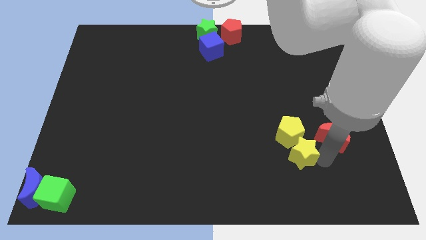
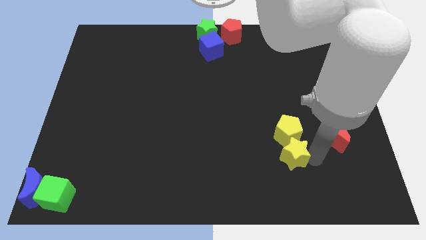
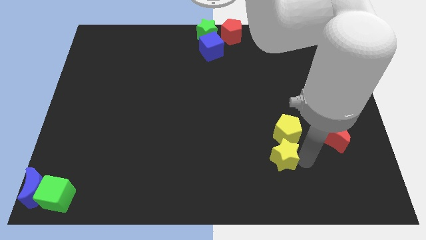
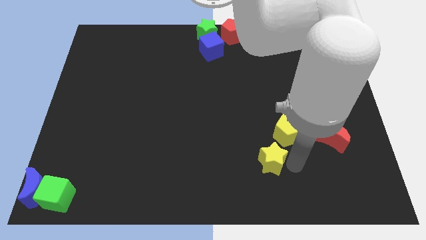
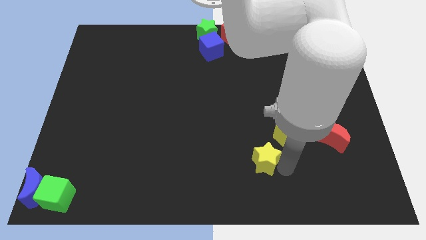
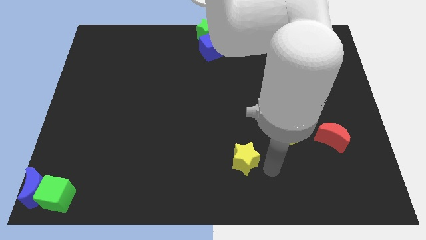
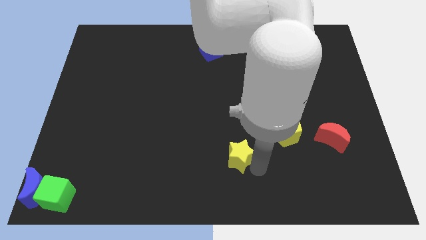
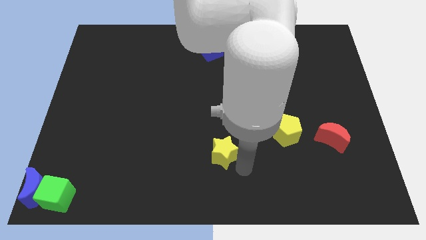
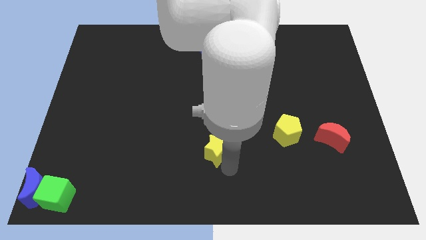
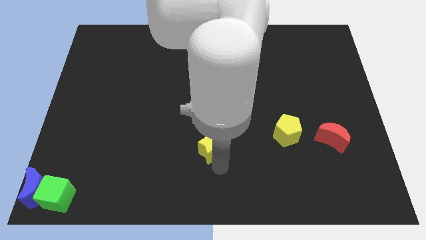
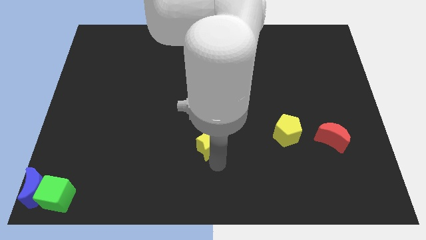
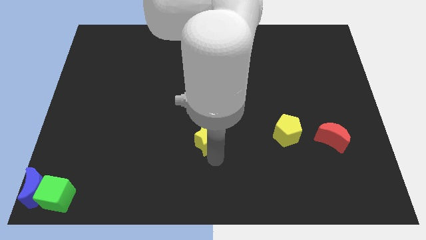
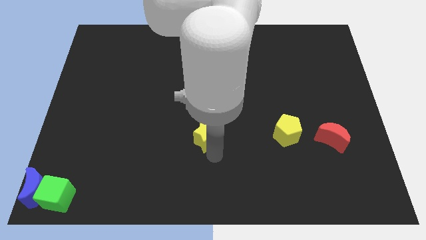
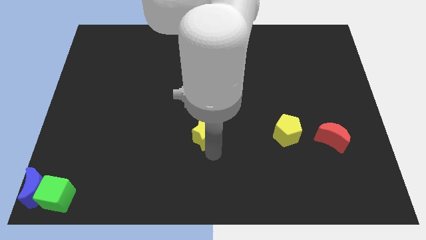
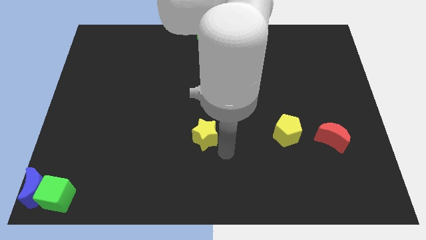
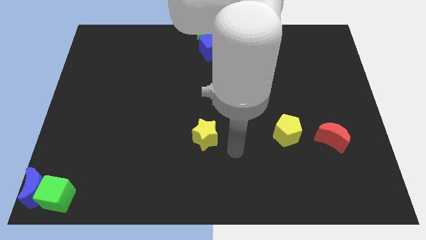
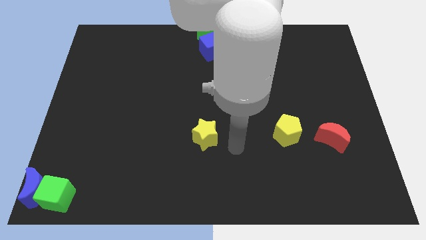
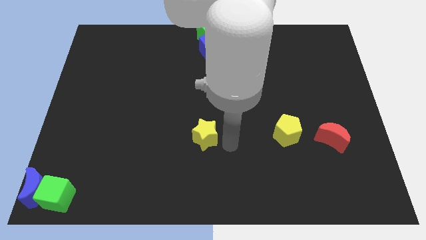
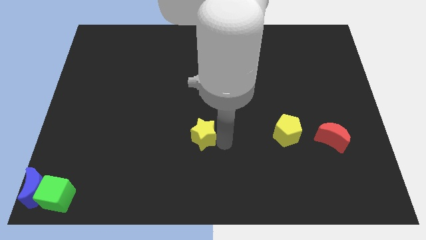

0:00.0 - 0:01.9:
separate the yellow star from the yellow pentagon

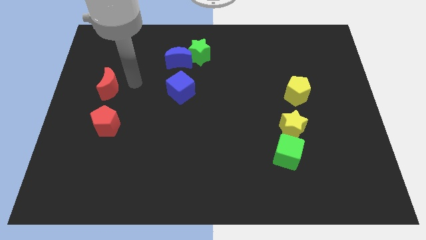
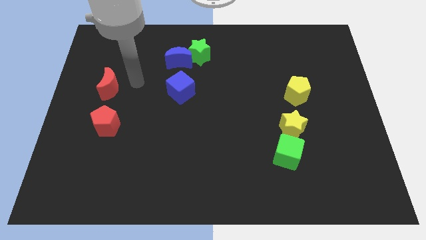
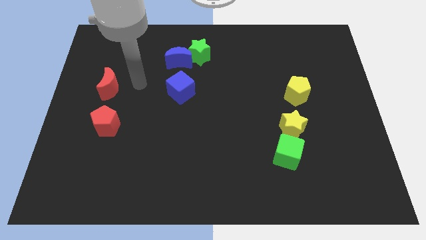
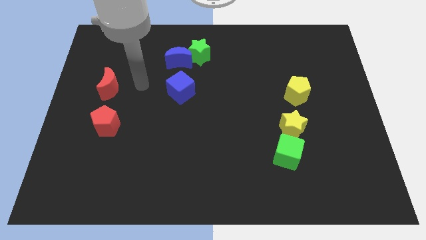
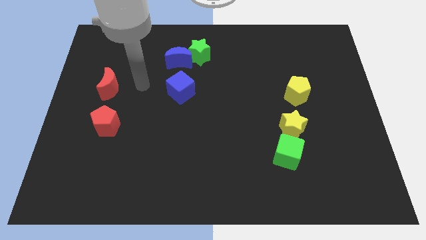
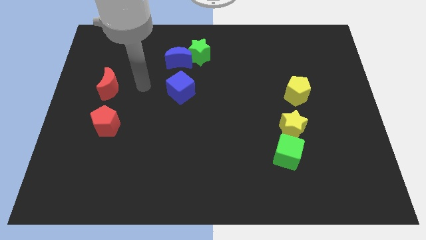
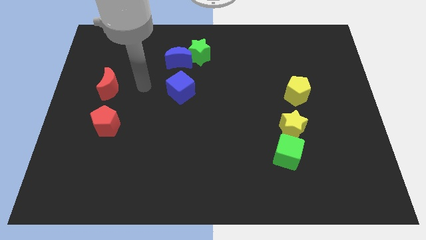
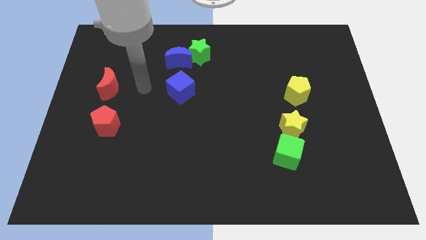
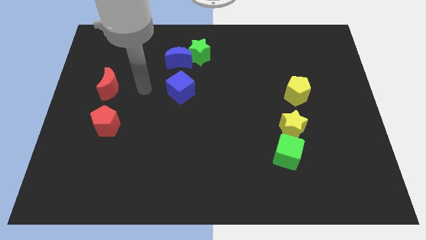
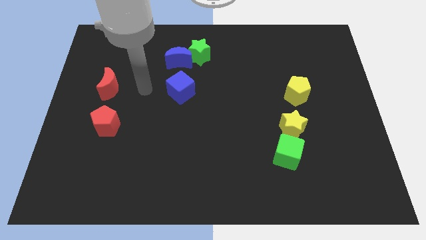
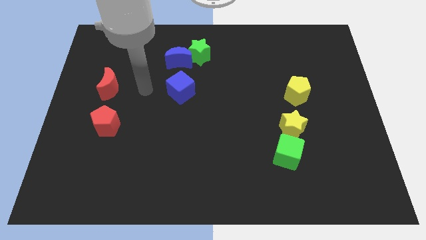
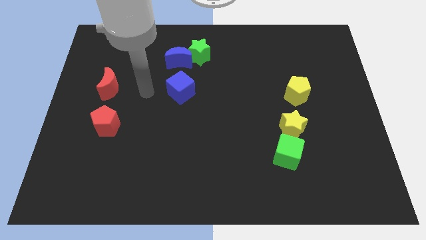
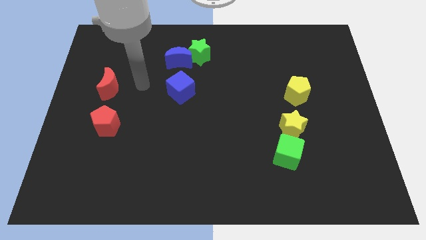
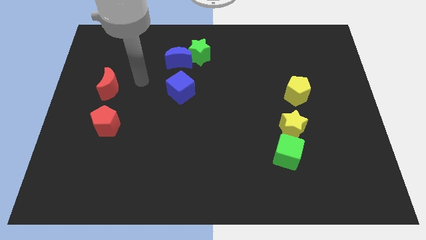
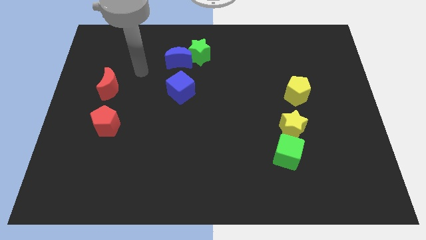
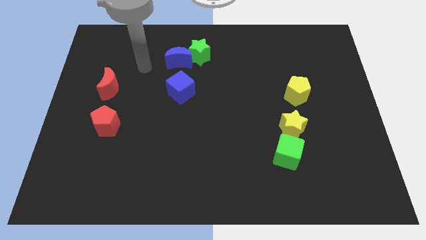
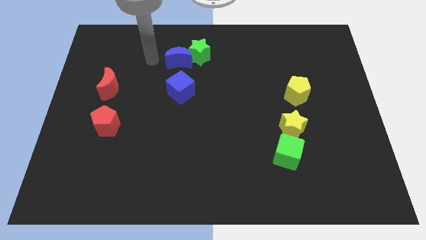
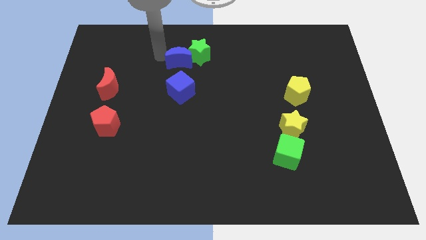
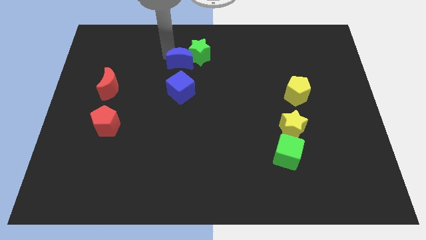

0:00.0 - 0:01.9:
touch the top left side of the blue crescent

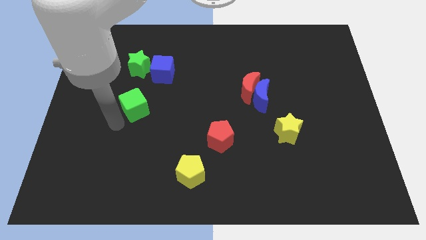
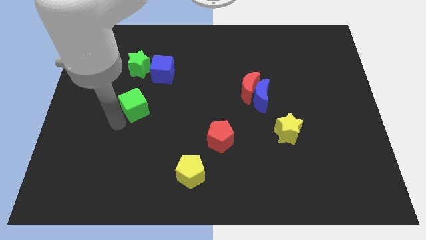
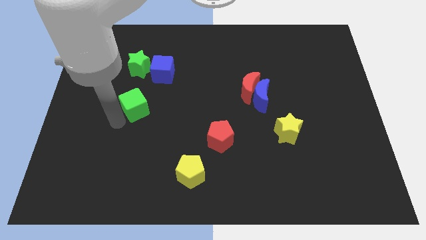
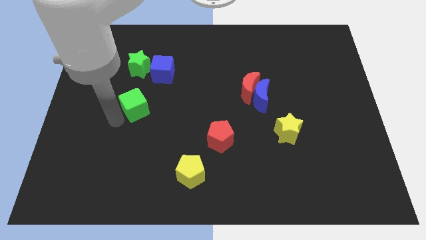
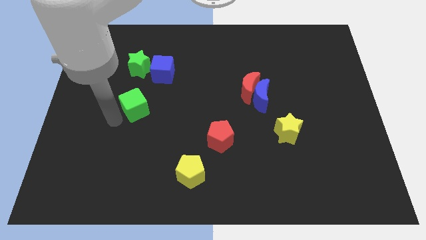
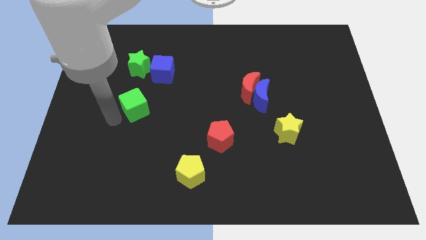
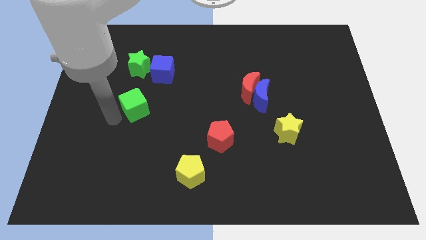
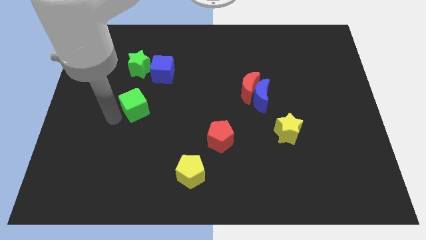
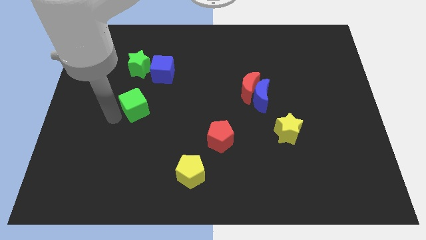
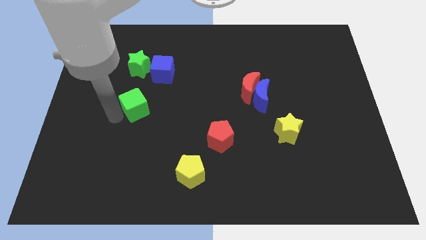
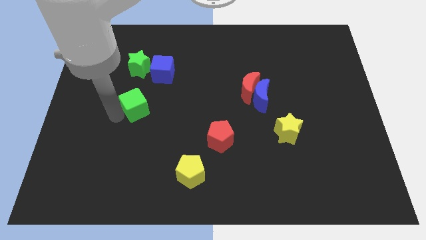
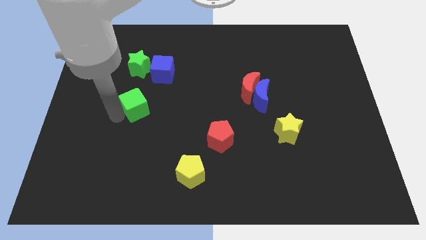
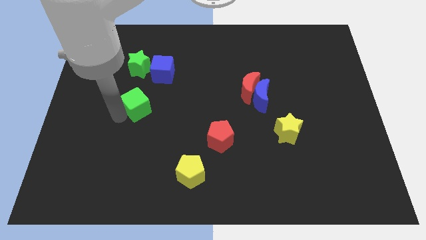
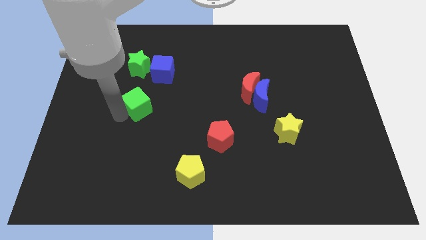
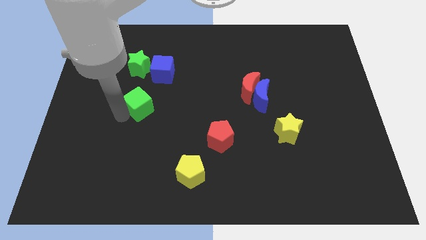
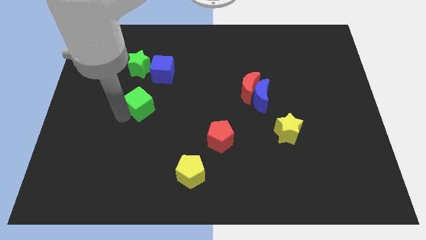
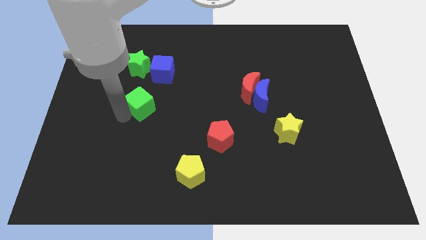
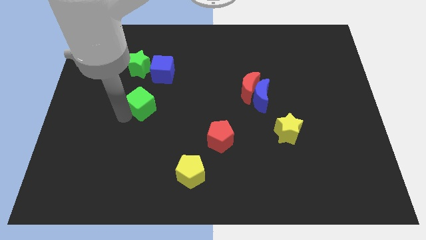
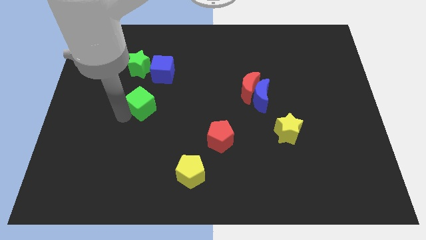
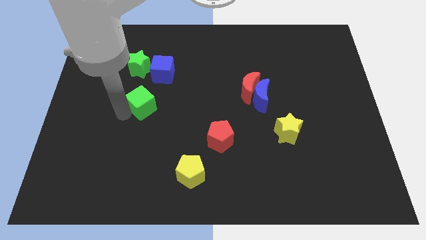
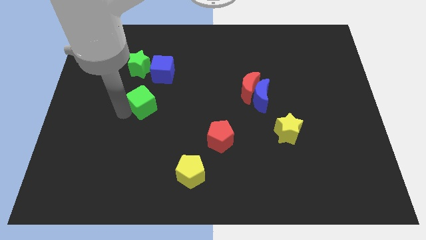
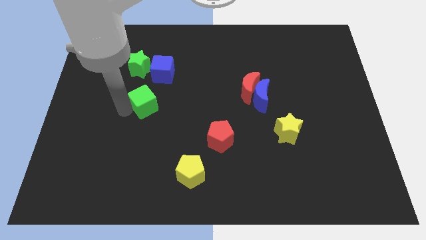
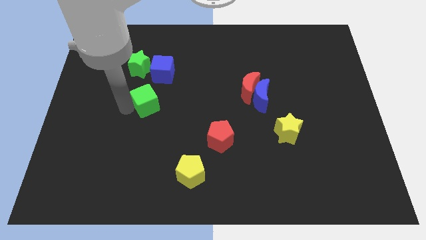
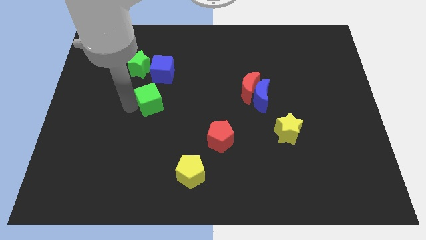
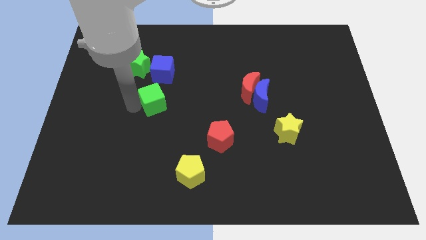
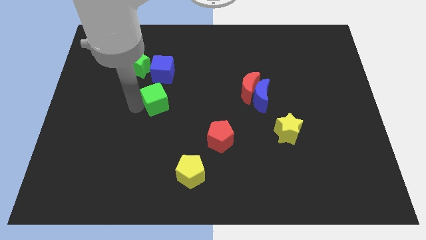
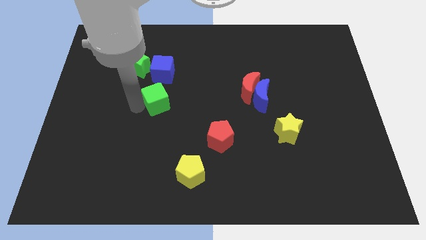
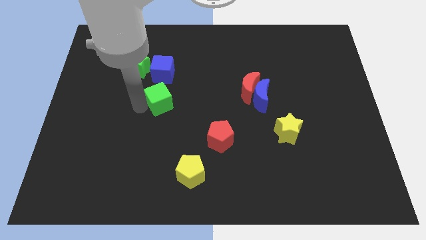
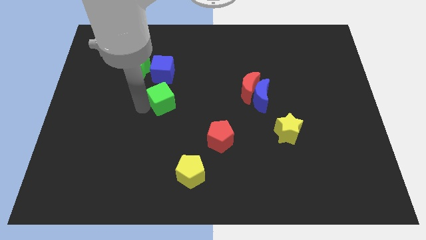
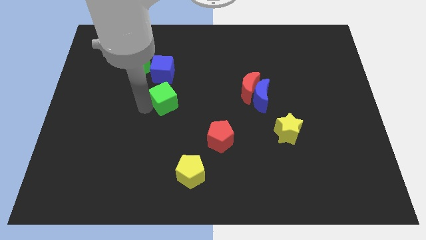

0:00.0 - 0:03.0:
push the green cube to the bottom of the blue cube

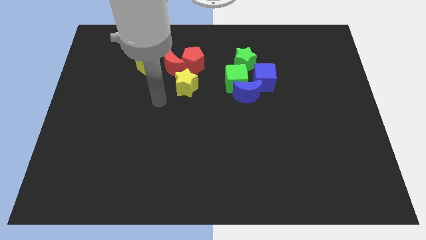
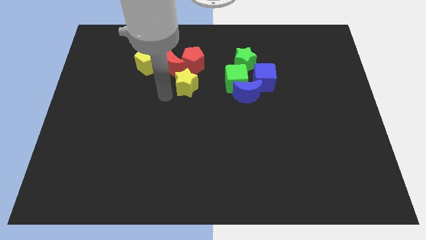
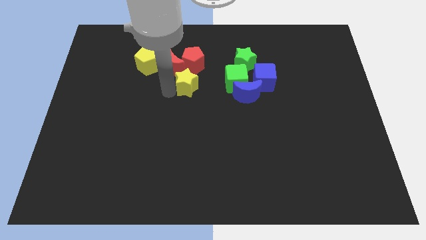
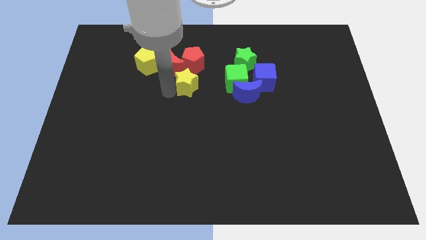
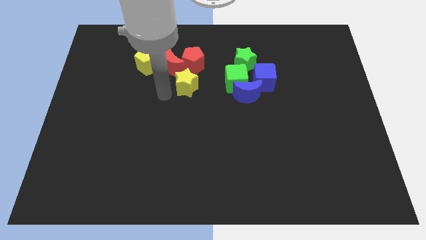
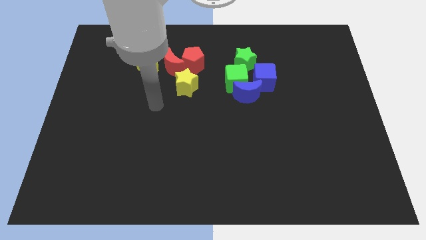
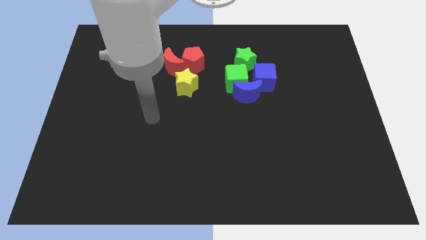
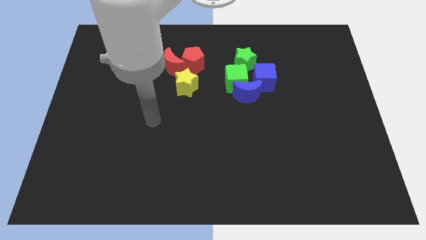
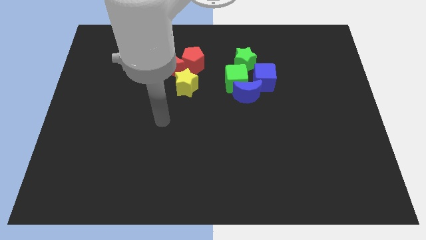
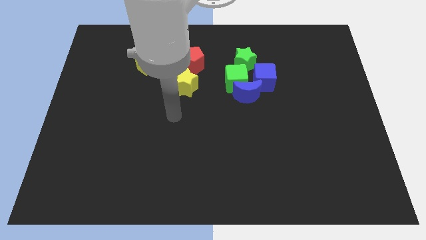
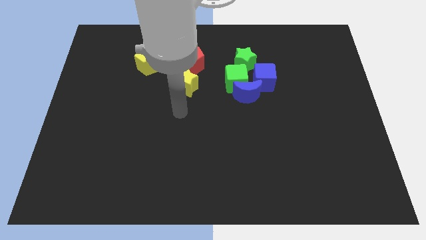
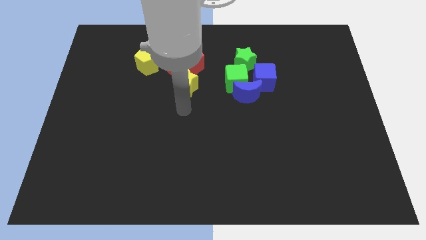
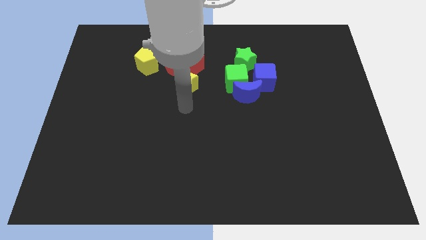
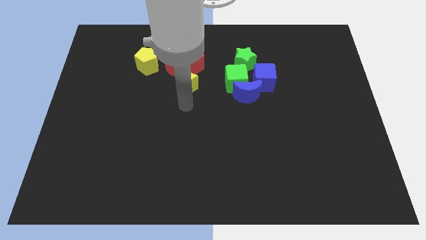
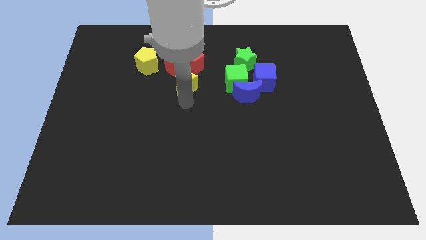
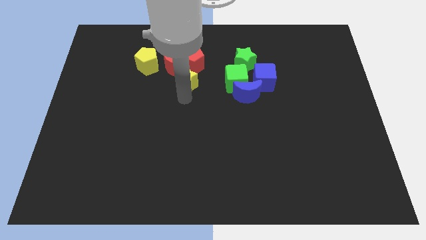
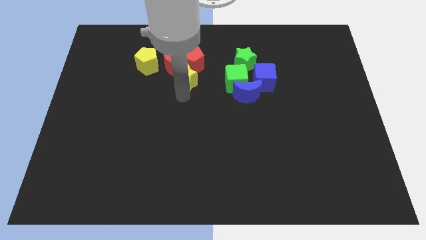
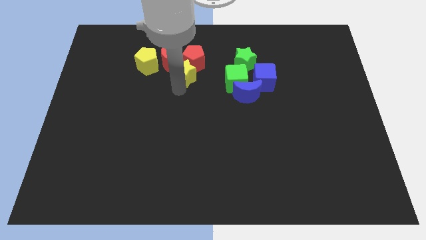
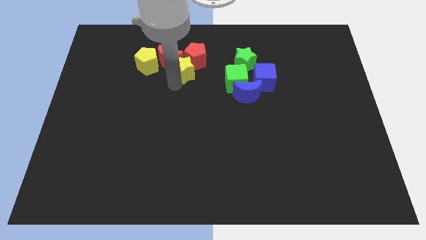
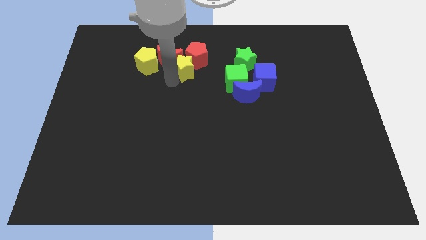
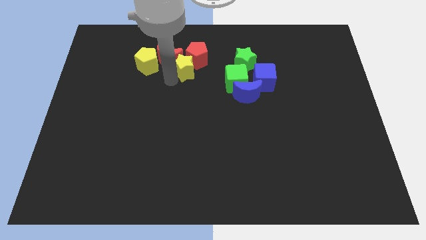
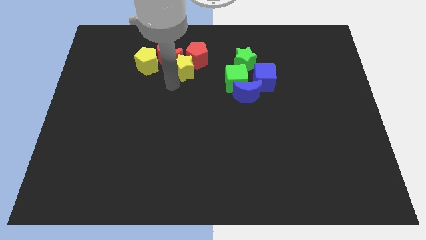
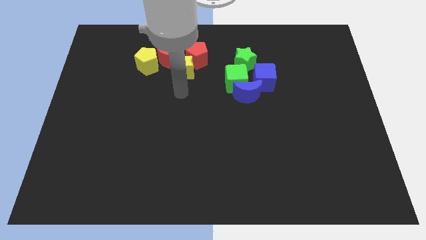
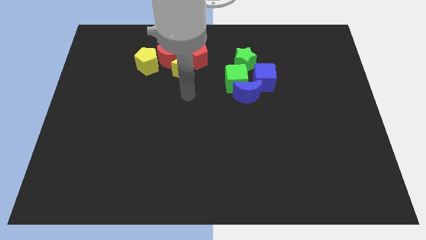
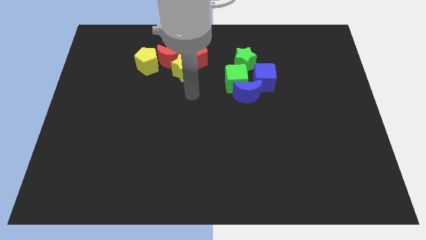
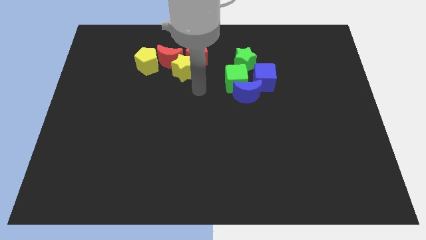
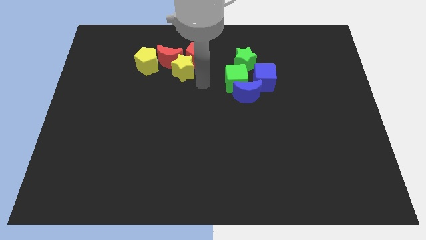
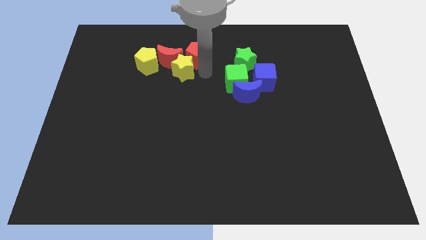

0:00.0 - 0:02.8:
move the yellow star into red moon and red pentagon
